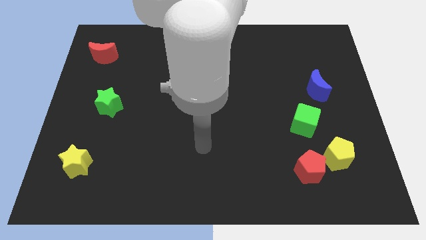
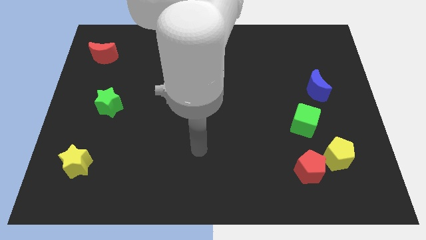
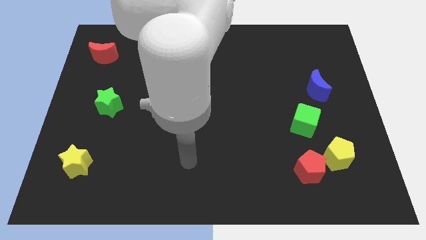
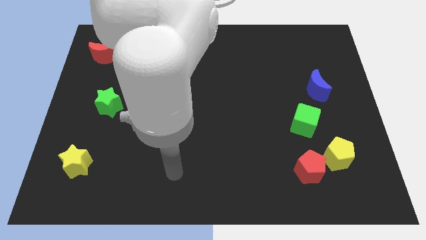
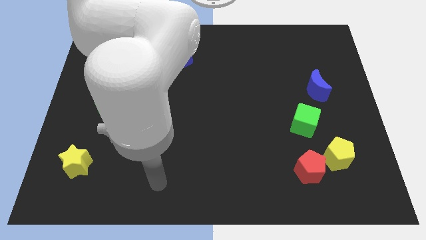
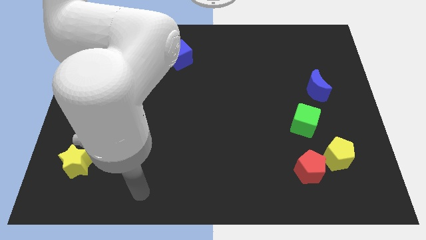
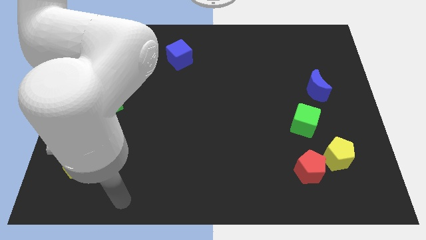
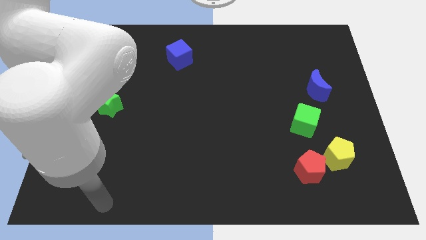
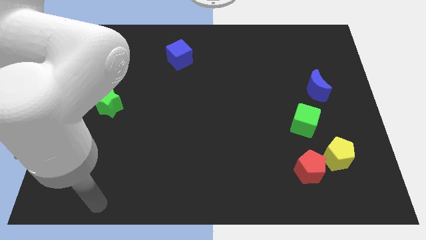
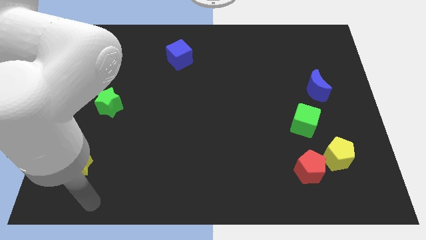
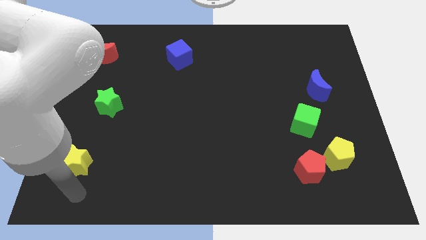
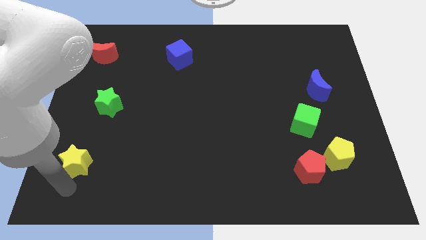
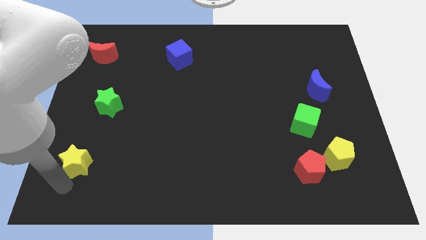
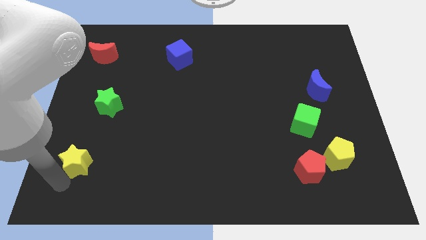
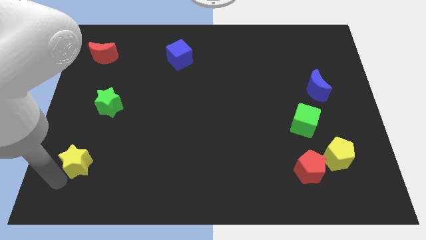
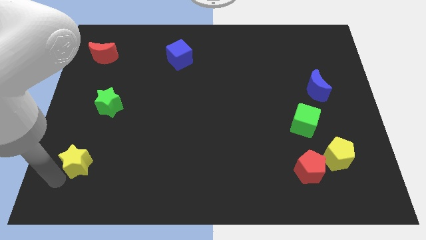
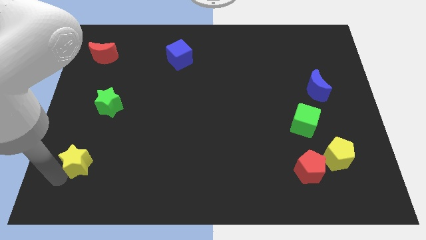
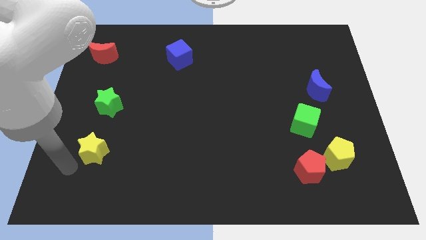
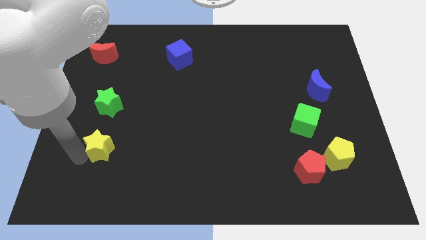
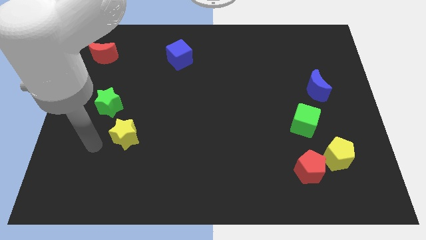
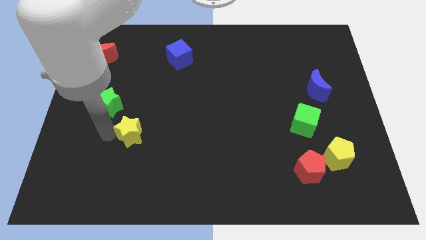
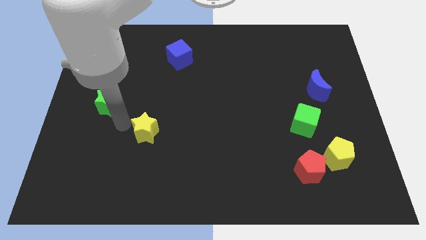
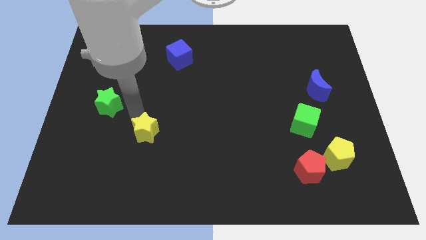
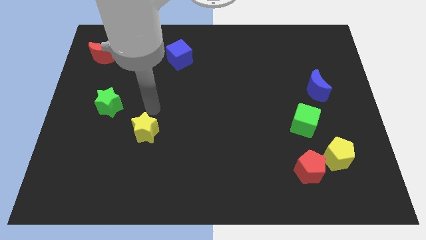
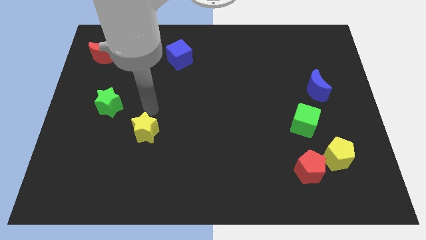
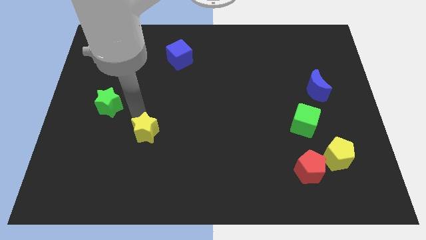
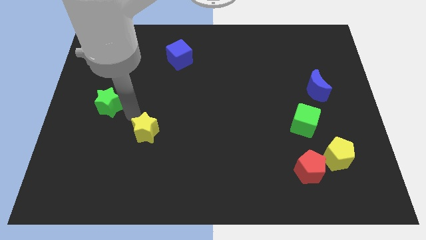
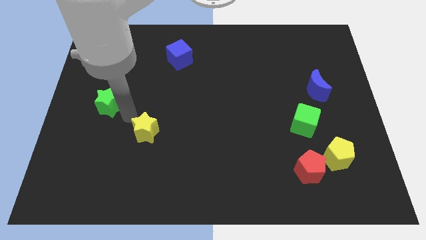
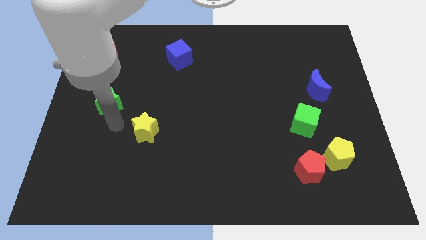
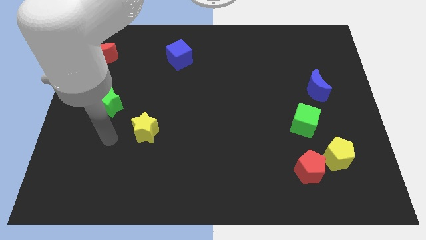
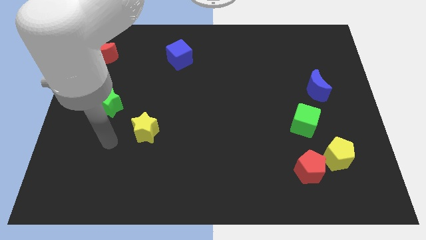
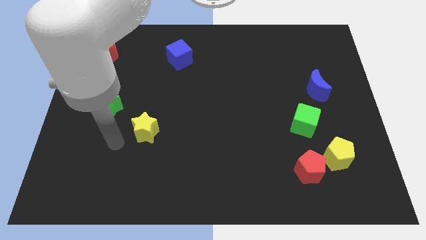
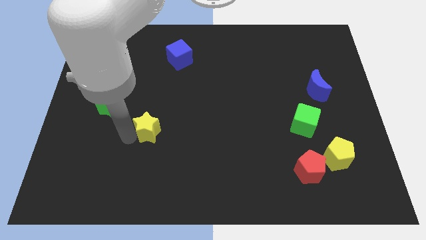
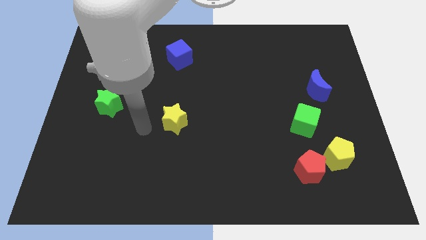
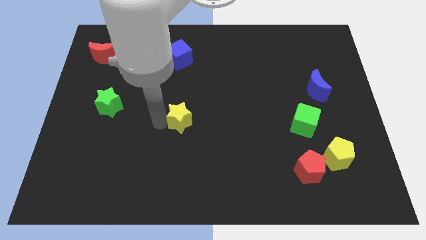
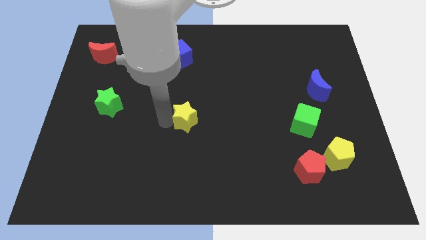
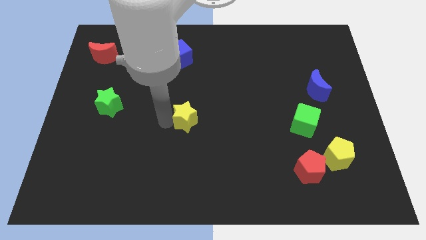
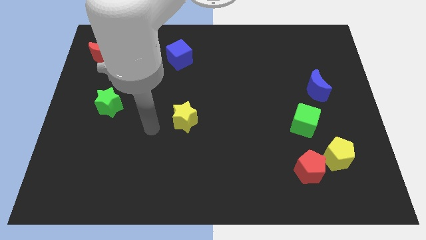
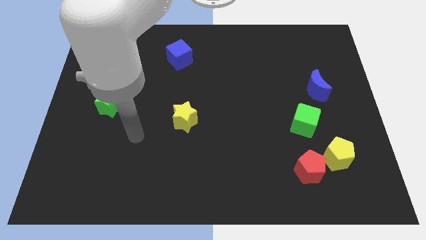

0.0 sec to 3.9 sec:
put the yellow star underneath the blue cube

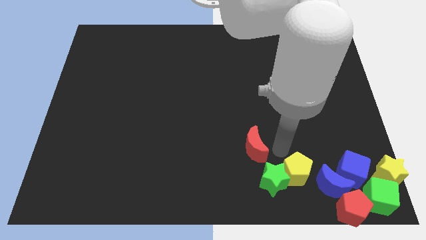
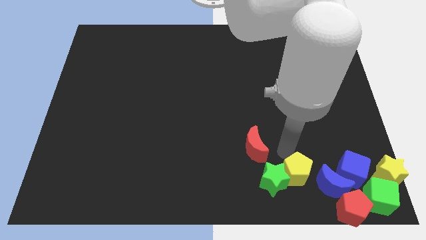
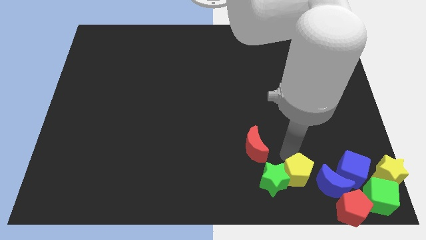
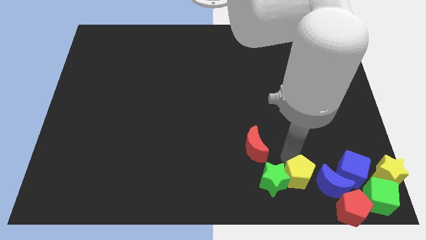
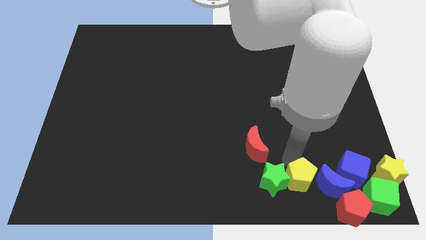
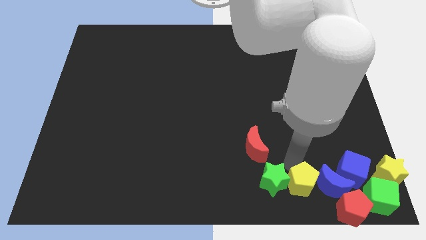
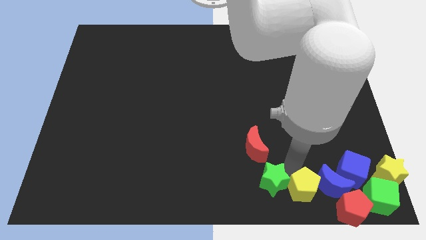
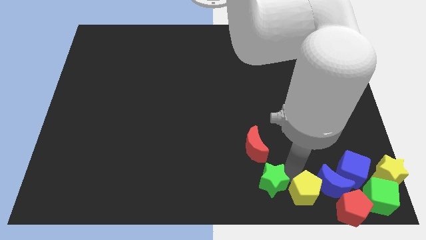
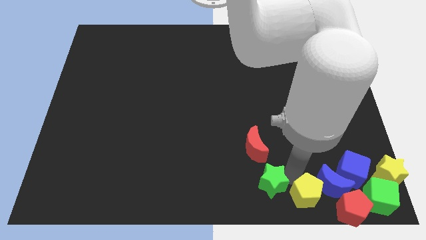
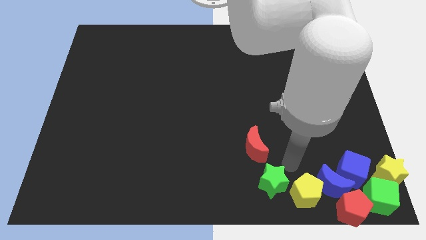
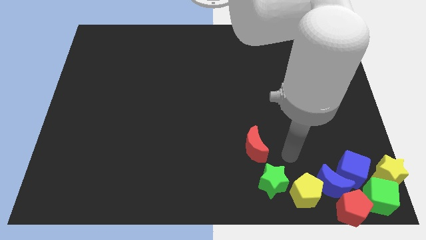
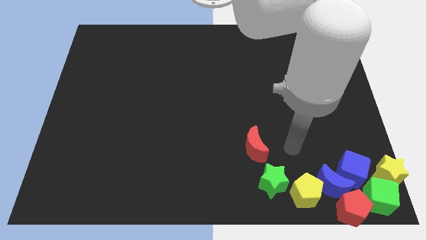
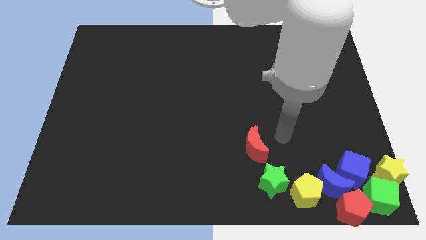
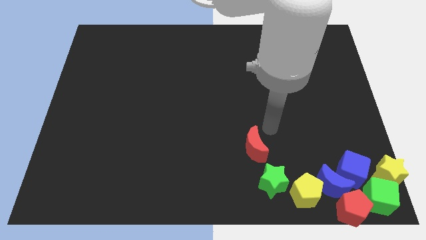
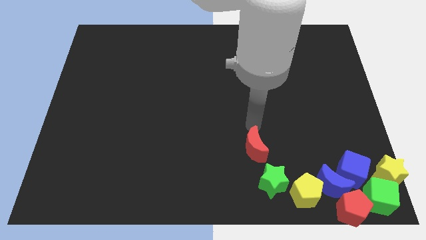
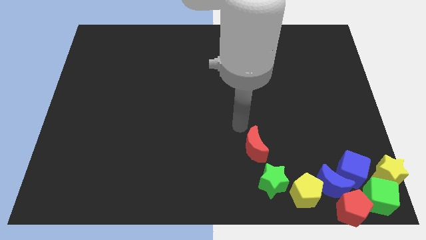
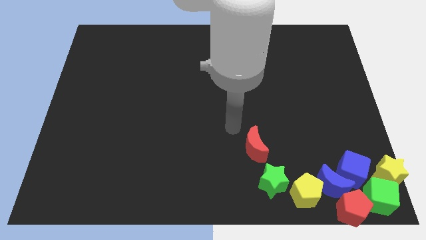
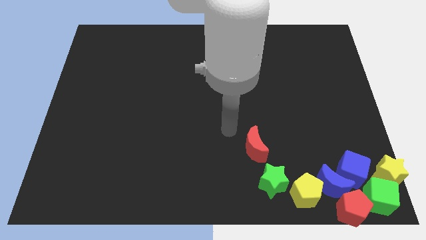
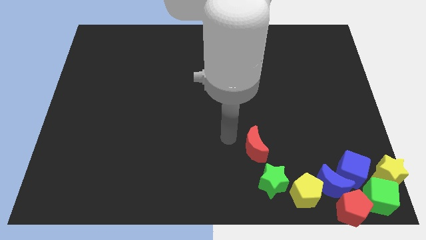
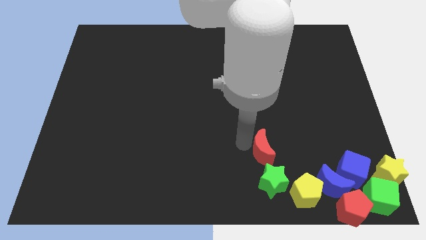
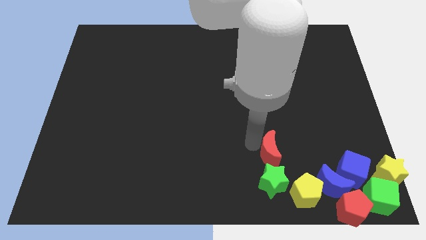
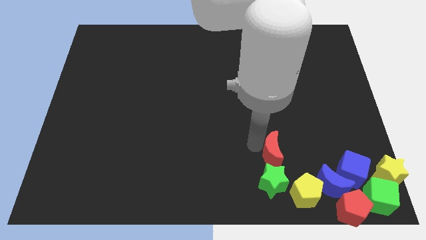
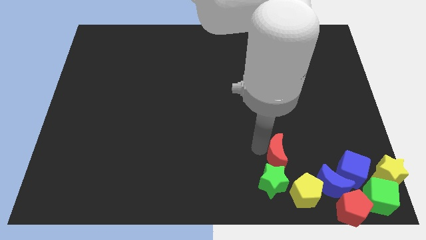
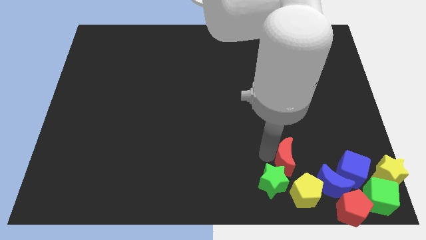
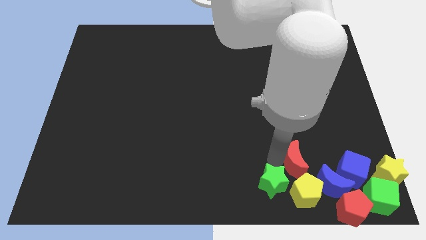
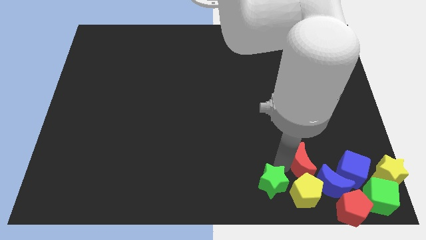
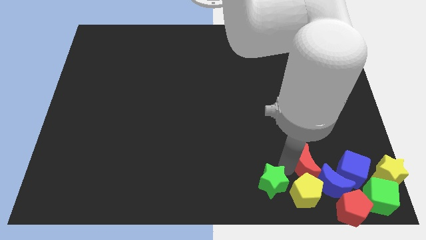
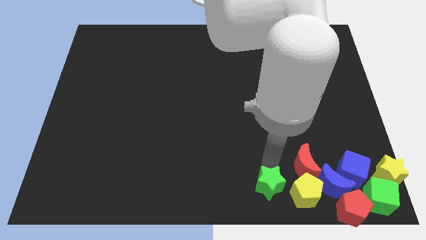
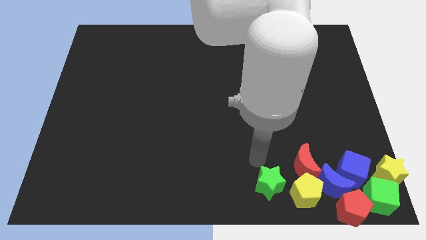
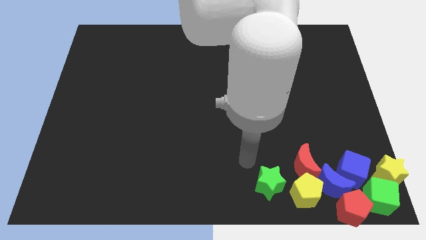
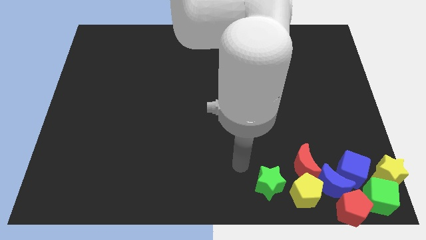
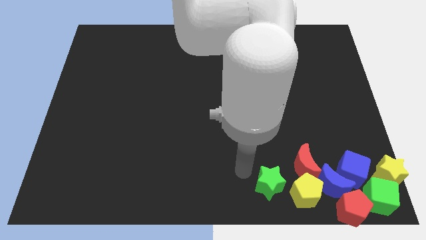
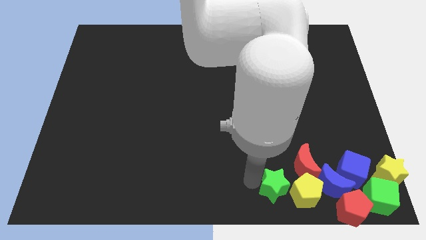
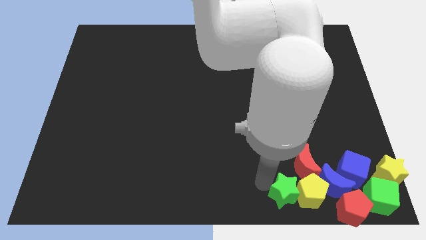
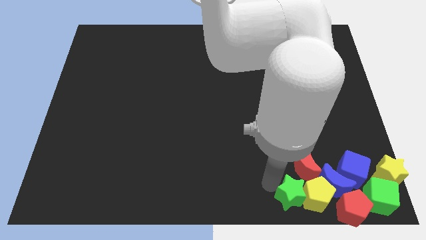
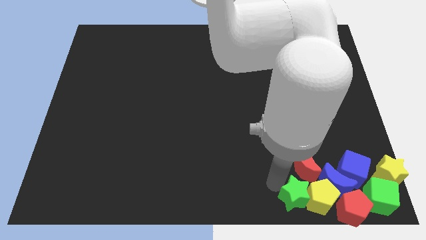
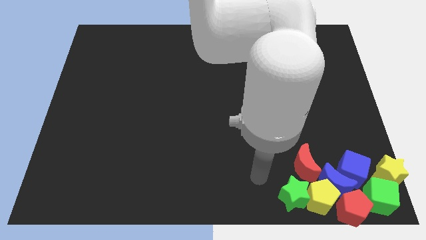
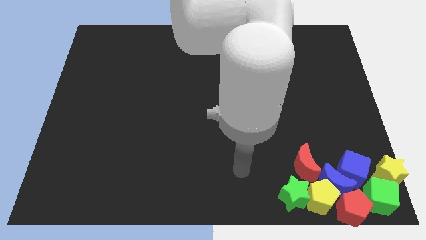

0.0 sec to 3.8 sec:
push the green star and yellow pentagon towards the group of blocks

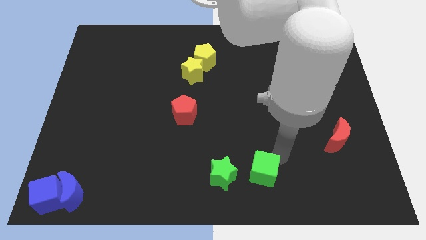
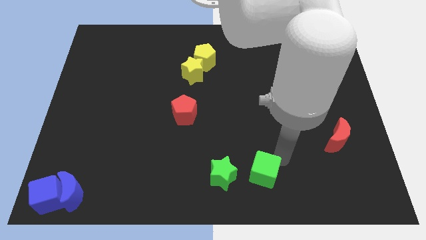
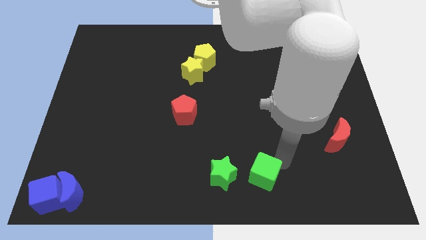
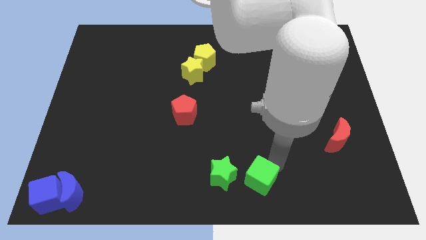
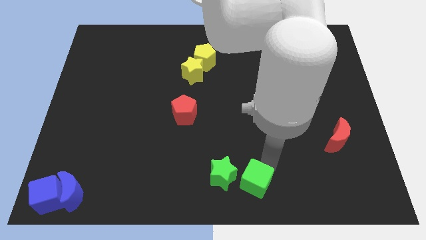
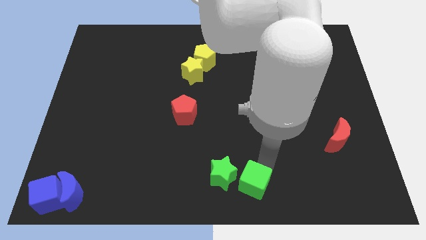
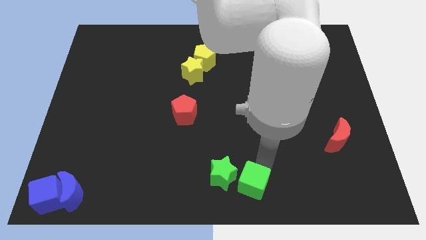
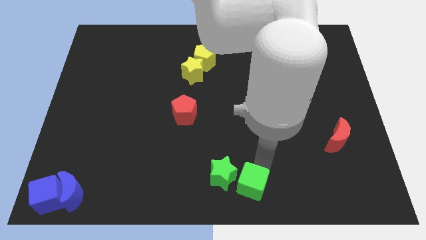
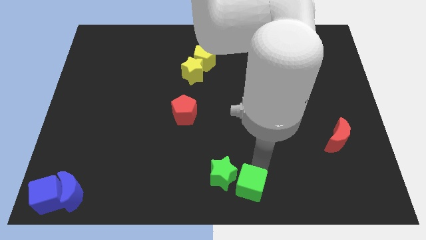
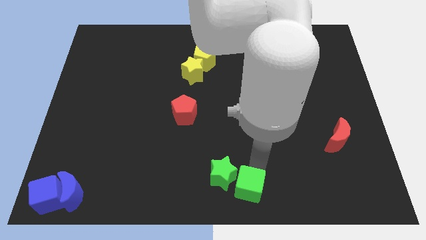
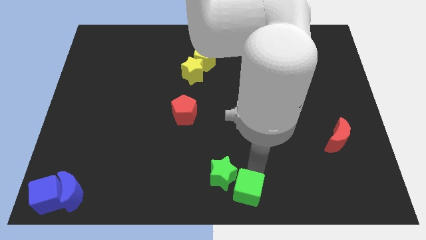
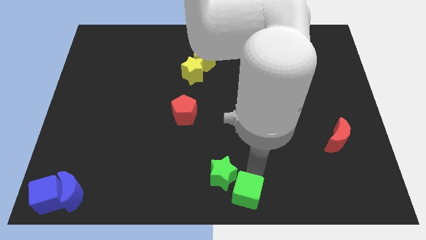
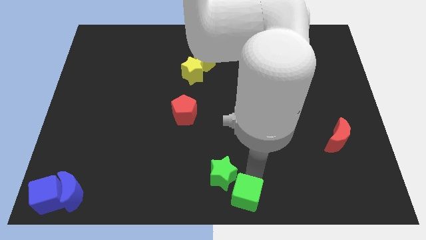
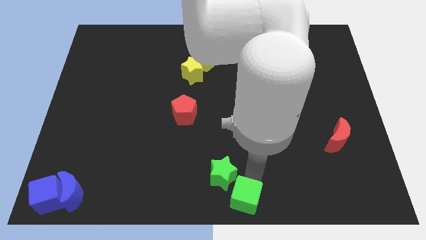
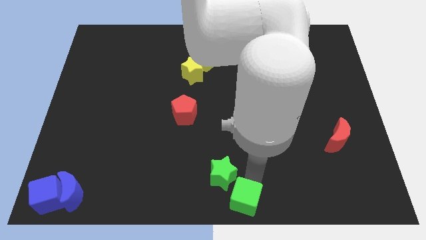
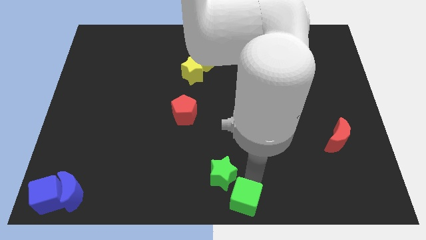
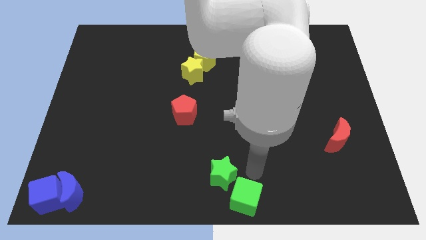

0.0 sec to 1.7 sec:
push the green cube towards the bottom center of the board
